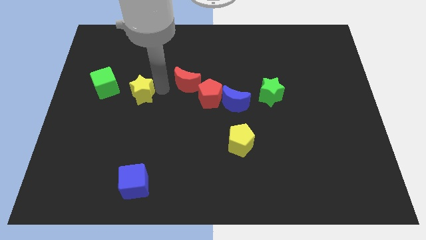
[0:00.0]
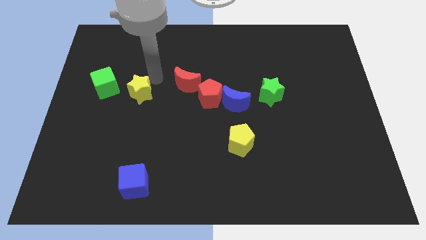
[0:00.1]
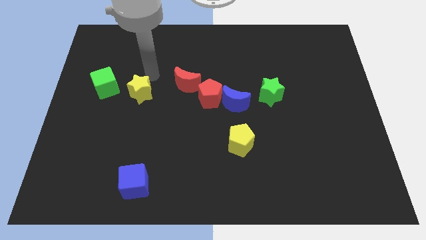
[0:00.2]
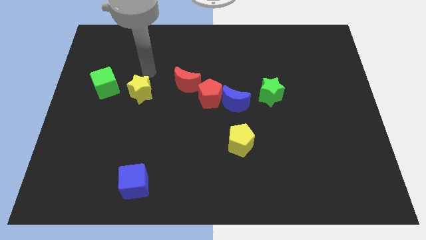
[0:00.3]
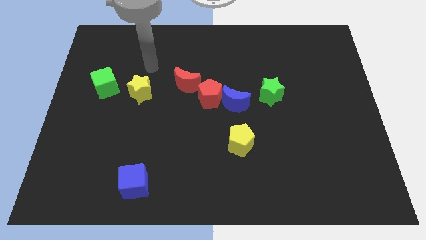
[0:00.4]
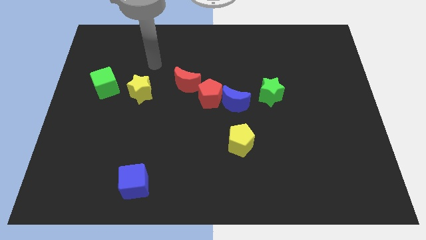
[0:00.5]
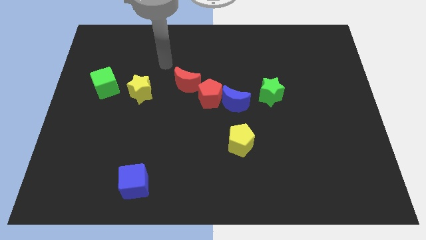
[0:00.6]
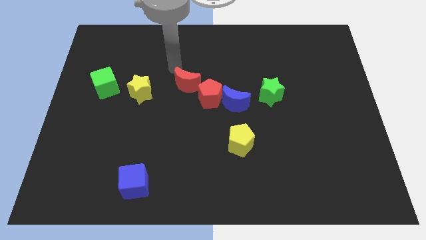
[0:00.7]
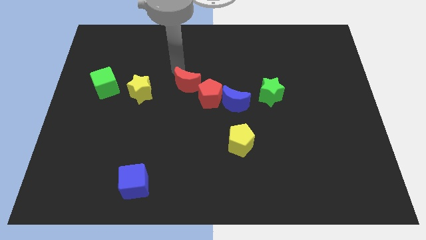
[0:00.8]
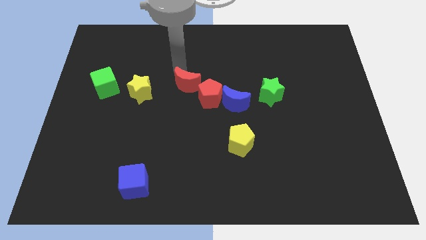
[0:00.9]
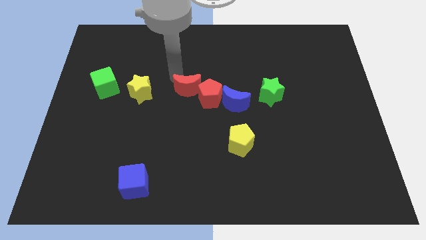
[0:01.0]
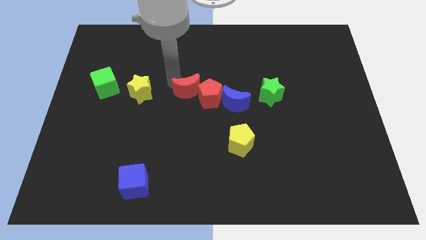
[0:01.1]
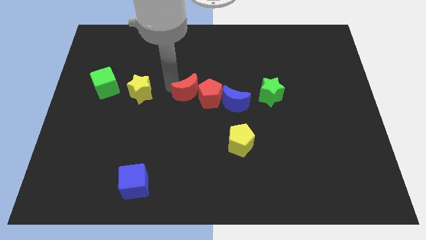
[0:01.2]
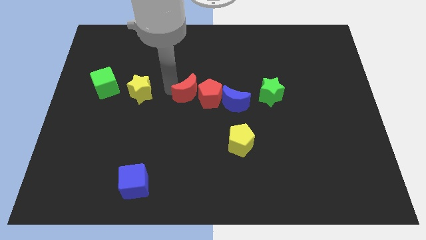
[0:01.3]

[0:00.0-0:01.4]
place your arm in between the yellow star and red moon

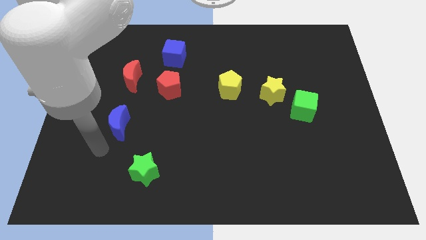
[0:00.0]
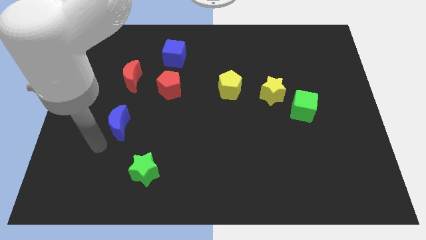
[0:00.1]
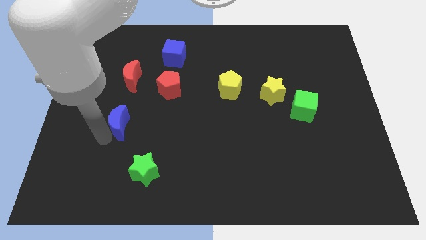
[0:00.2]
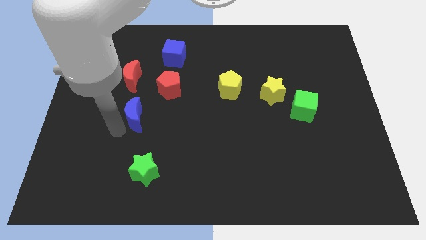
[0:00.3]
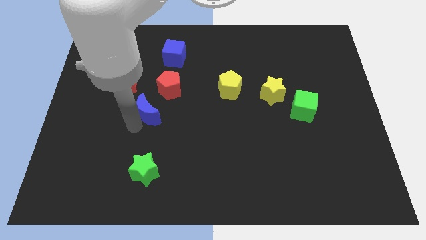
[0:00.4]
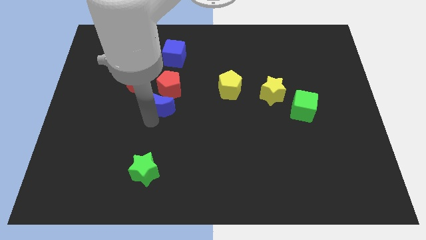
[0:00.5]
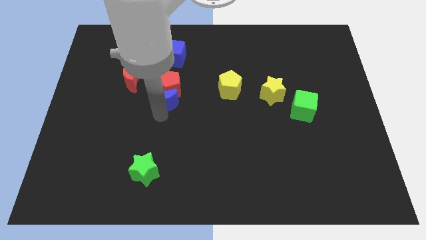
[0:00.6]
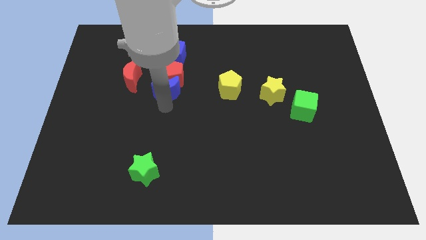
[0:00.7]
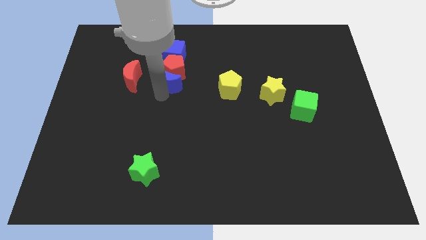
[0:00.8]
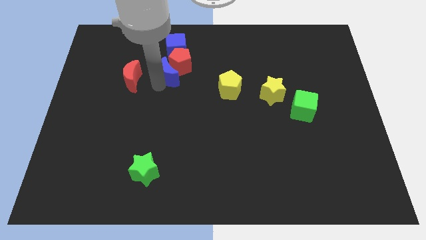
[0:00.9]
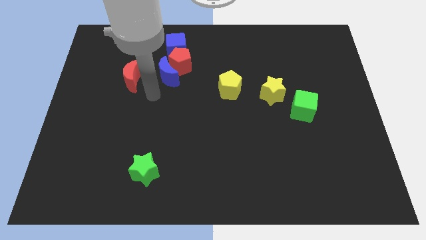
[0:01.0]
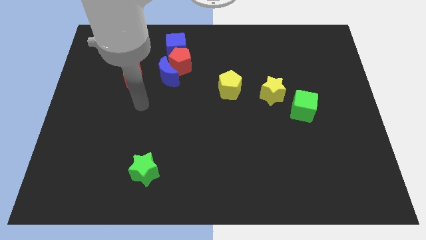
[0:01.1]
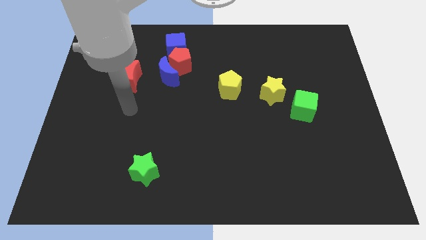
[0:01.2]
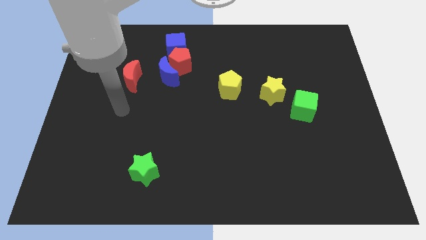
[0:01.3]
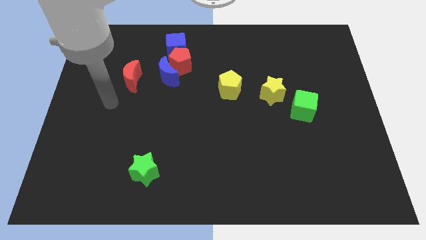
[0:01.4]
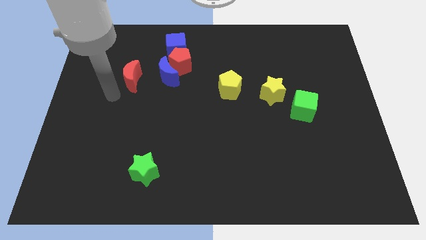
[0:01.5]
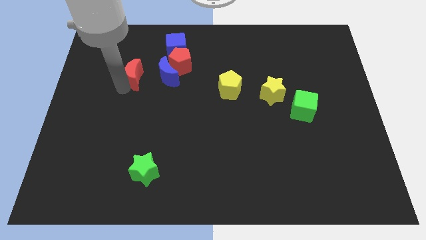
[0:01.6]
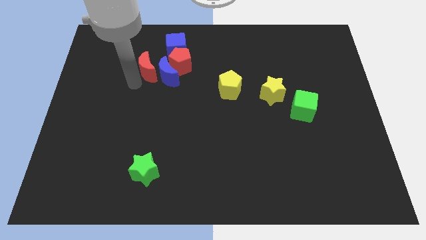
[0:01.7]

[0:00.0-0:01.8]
push the blue crescent into the red pentagon

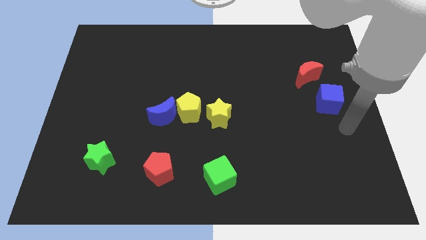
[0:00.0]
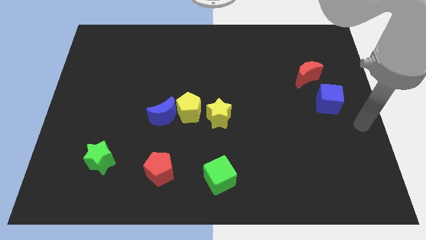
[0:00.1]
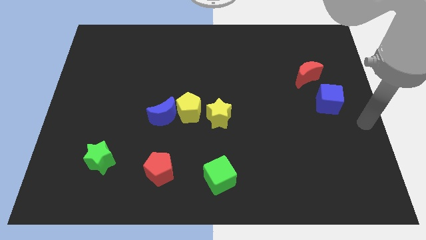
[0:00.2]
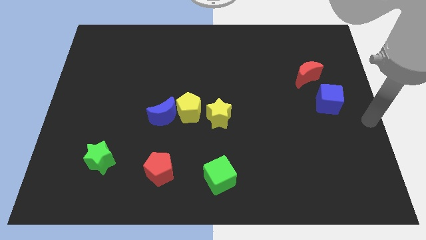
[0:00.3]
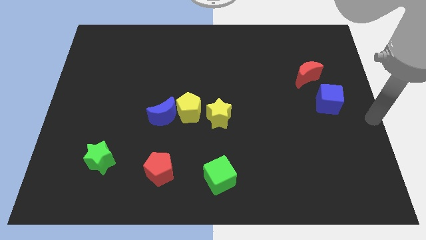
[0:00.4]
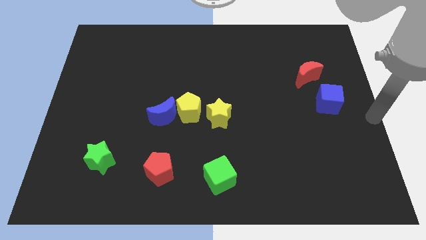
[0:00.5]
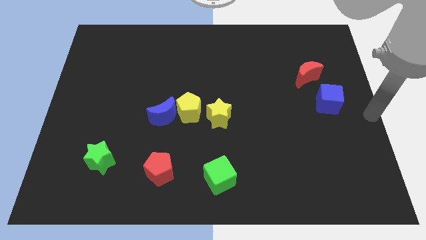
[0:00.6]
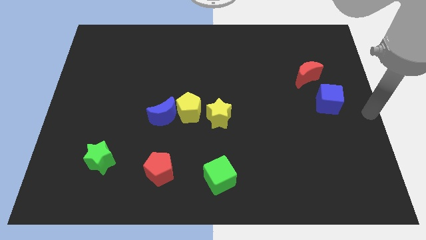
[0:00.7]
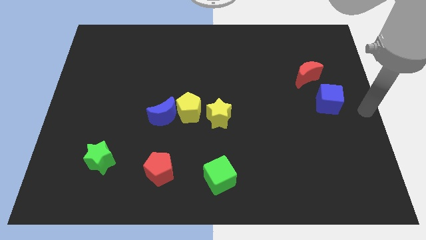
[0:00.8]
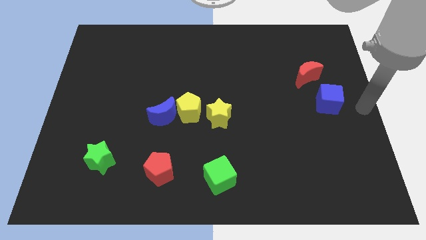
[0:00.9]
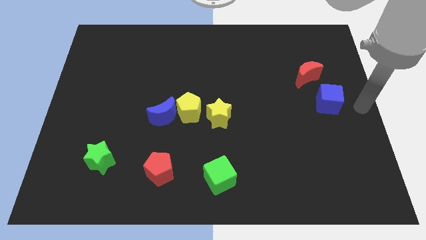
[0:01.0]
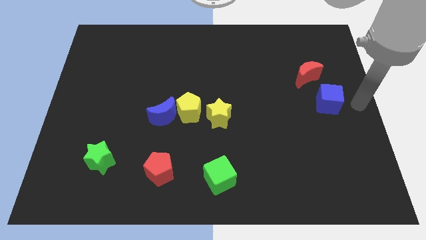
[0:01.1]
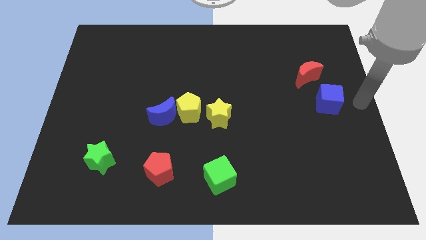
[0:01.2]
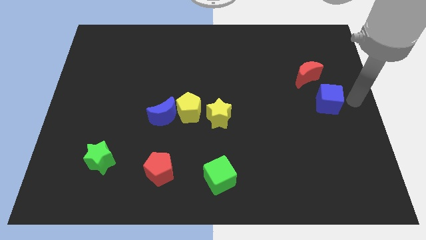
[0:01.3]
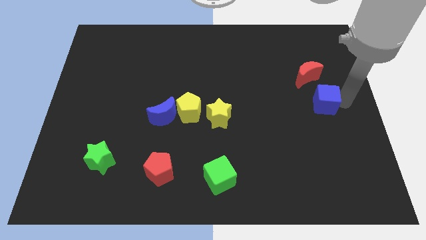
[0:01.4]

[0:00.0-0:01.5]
push the blue cube below the red crescent

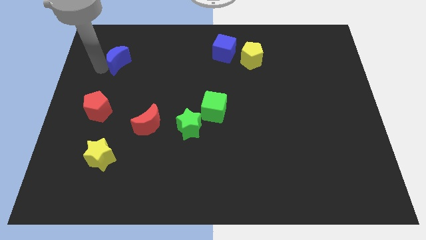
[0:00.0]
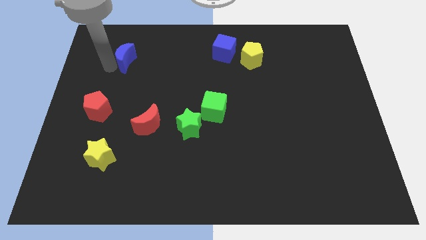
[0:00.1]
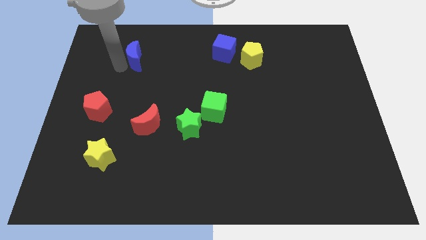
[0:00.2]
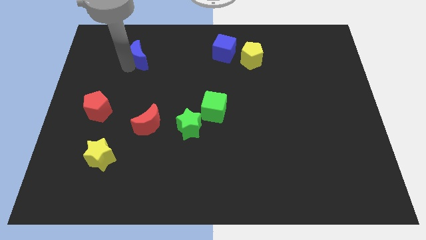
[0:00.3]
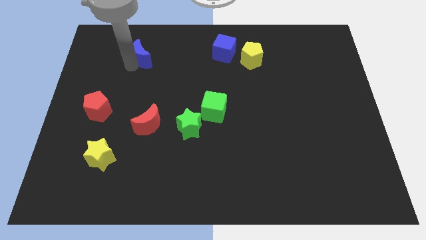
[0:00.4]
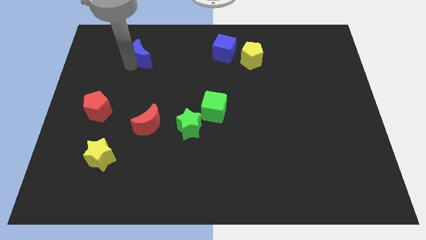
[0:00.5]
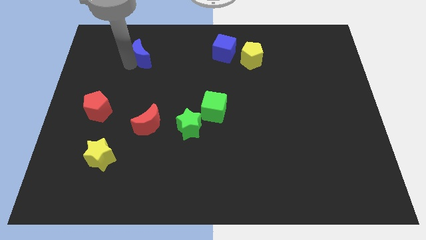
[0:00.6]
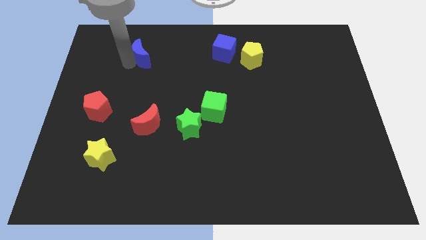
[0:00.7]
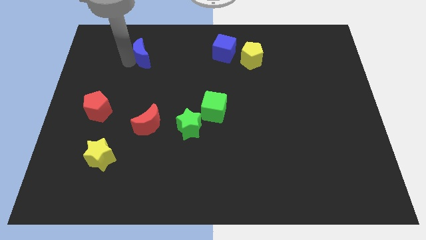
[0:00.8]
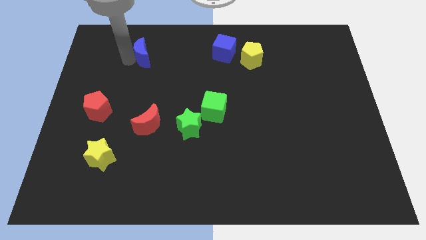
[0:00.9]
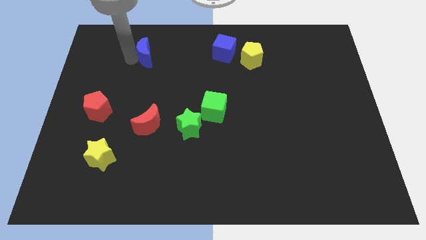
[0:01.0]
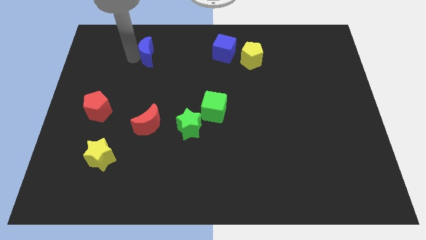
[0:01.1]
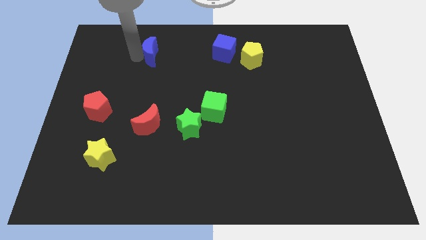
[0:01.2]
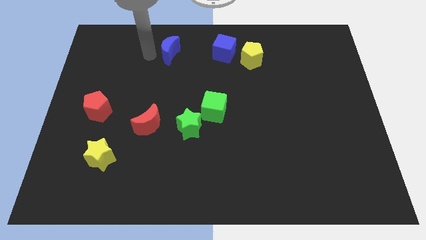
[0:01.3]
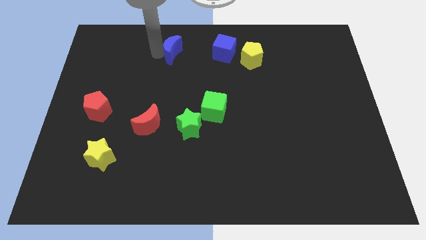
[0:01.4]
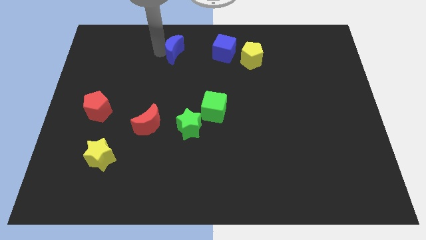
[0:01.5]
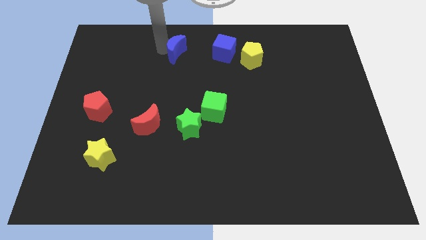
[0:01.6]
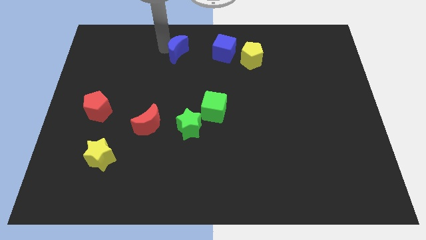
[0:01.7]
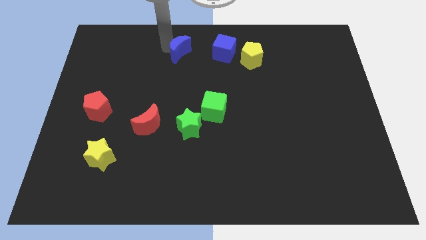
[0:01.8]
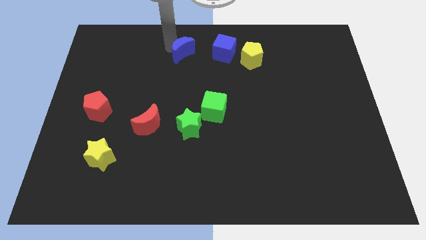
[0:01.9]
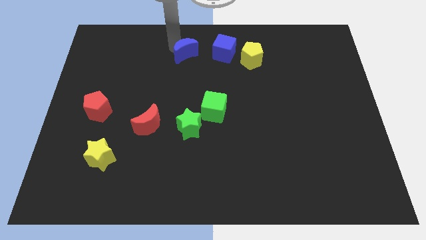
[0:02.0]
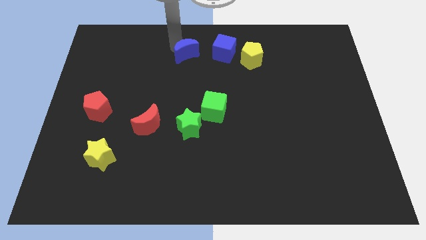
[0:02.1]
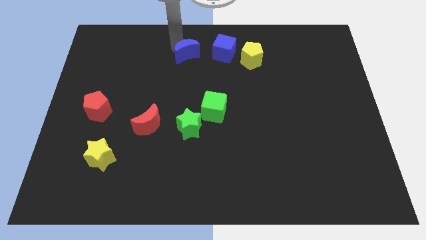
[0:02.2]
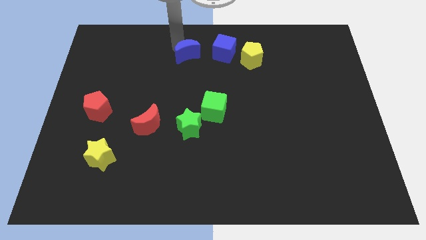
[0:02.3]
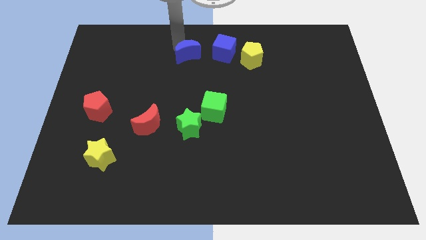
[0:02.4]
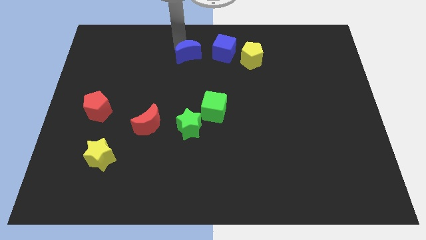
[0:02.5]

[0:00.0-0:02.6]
place the blue crescent near blue cube

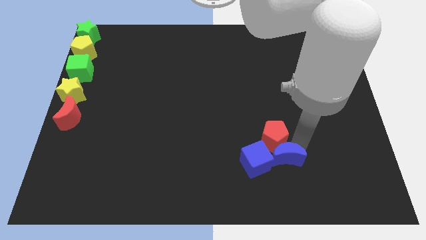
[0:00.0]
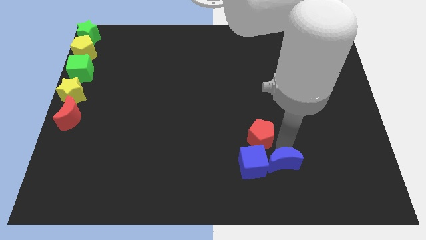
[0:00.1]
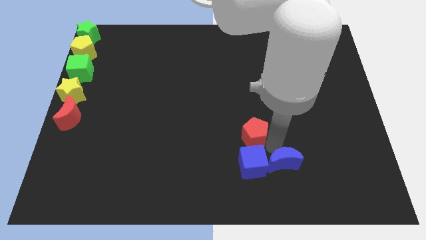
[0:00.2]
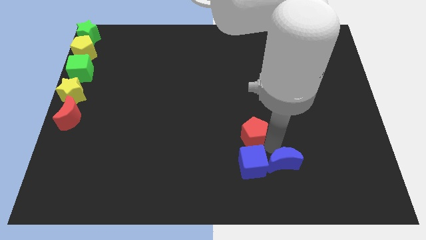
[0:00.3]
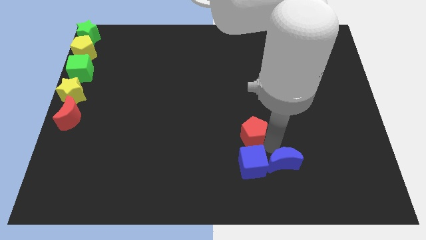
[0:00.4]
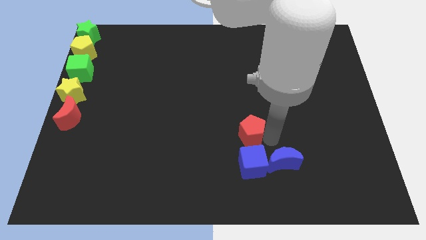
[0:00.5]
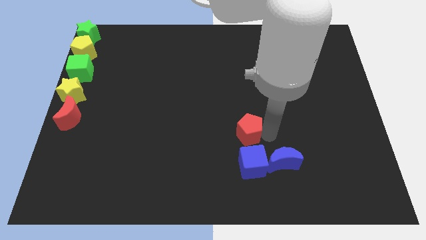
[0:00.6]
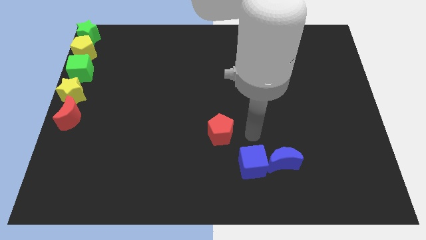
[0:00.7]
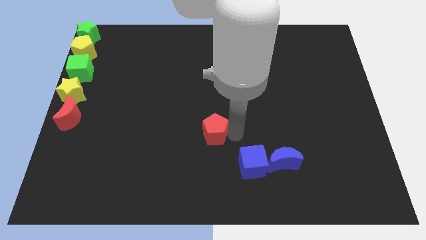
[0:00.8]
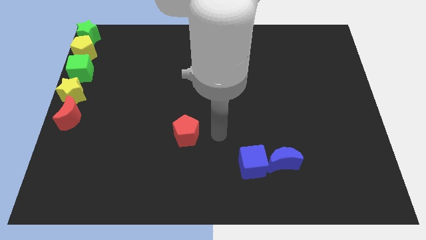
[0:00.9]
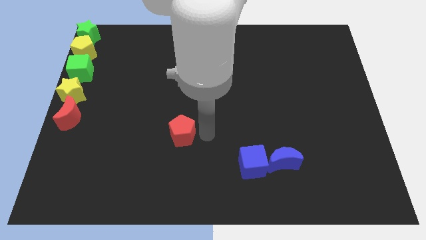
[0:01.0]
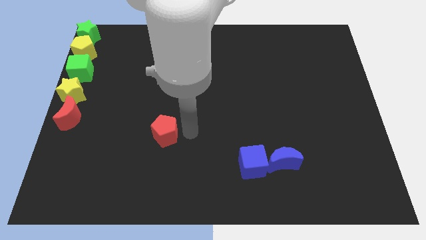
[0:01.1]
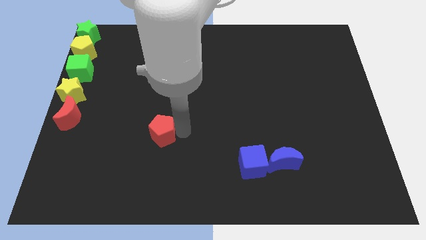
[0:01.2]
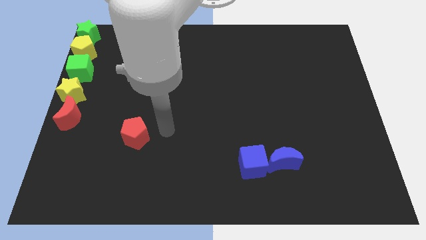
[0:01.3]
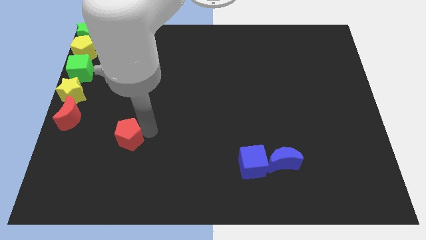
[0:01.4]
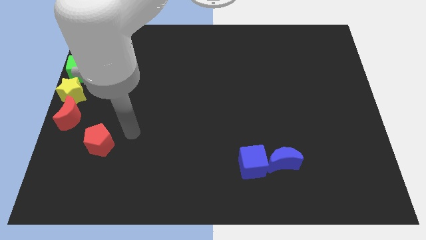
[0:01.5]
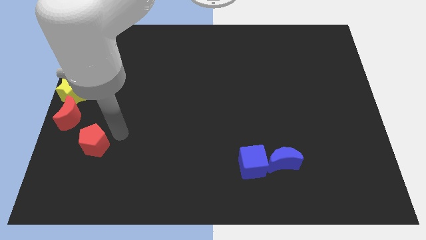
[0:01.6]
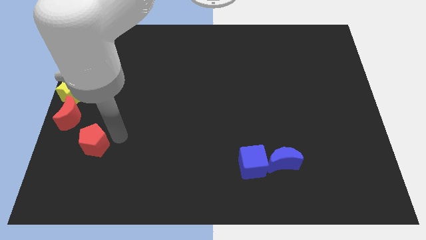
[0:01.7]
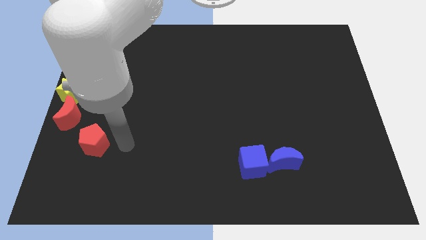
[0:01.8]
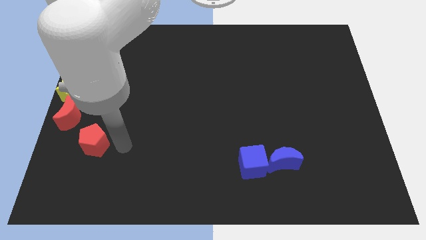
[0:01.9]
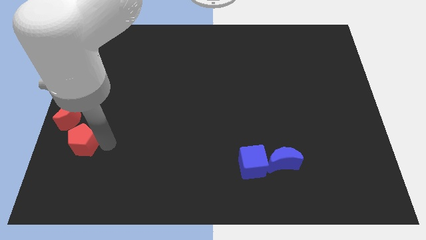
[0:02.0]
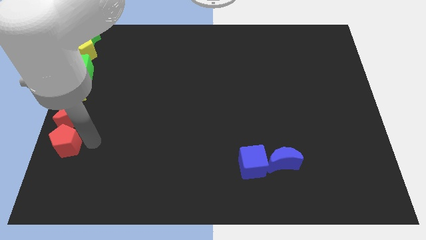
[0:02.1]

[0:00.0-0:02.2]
drag the red pentagon to the bottom right of the red moon
